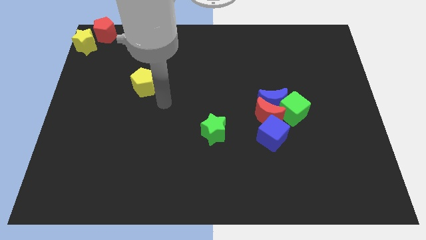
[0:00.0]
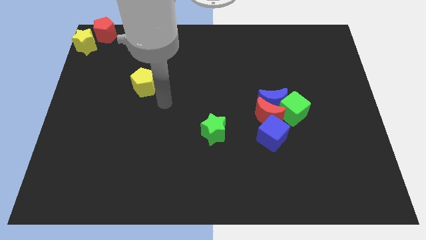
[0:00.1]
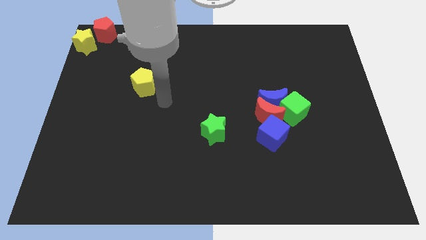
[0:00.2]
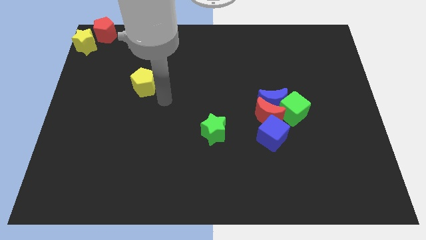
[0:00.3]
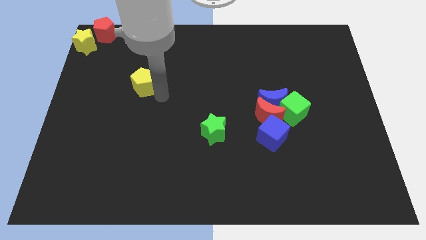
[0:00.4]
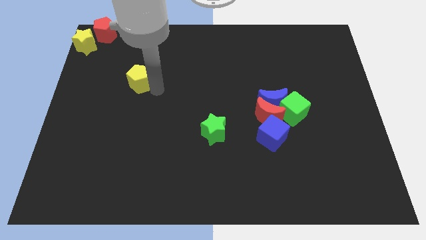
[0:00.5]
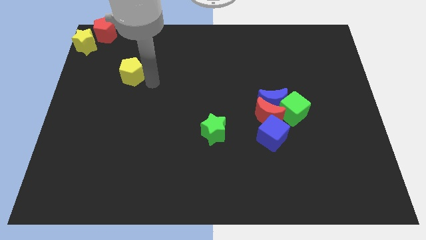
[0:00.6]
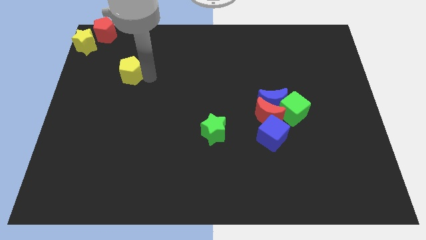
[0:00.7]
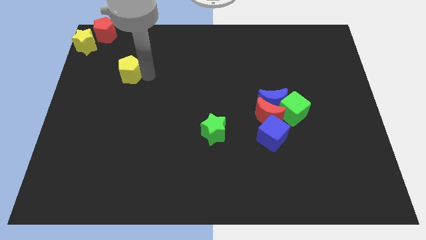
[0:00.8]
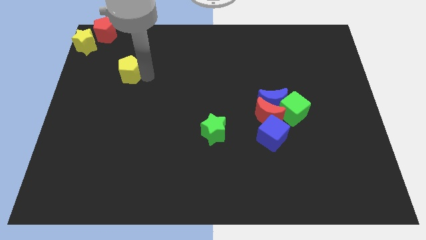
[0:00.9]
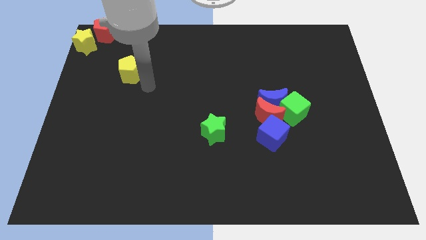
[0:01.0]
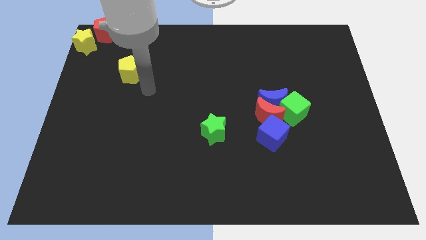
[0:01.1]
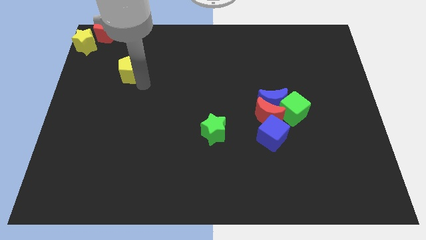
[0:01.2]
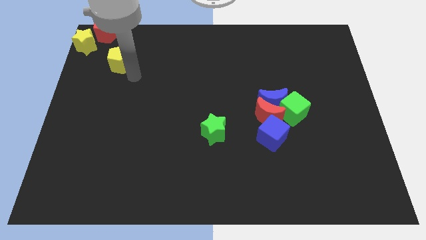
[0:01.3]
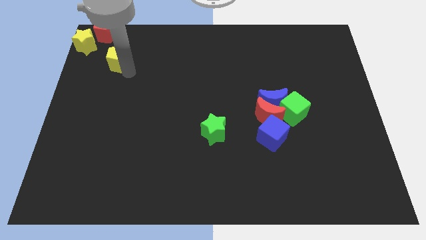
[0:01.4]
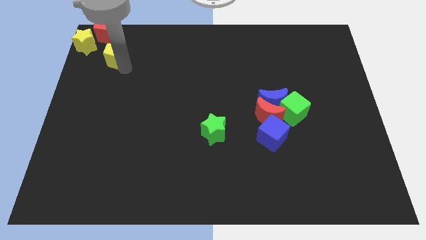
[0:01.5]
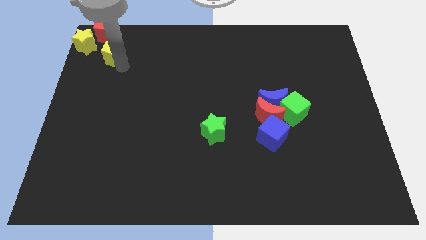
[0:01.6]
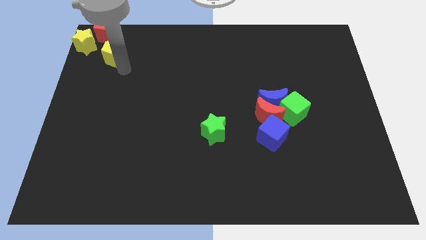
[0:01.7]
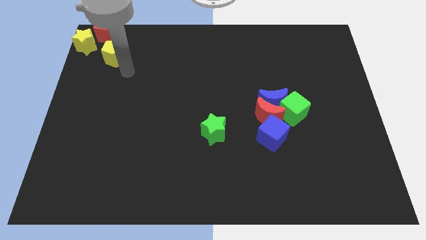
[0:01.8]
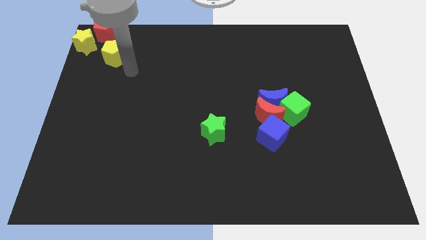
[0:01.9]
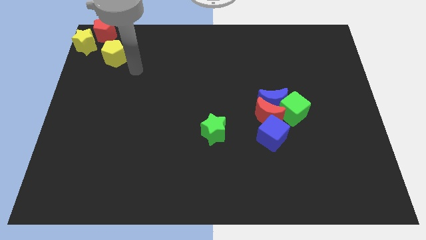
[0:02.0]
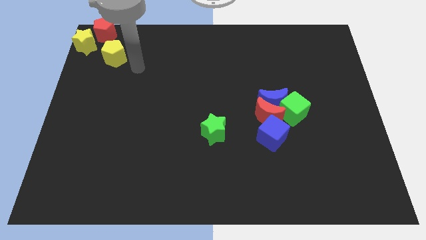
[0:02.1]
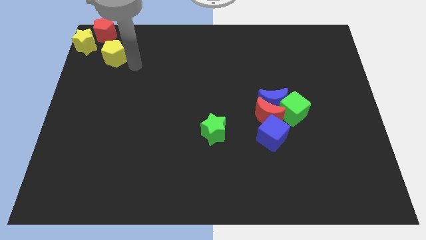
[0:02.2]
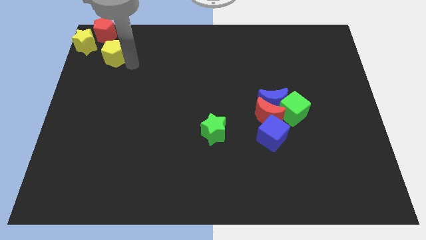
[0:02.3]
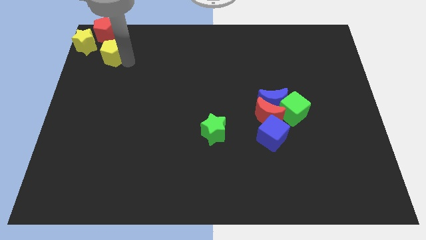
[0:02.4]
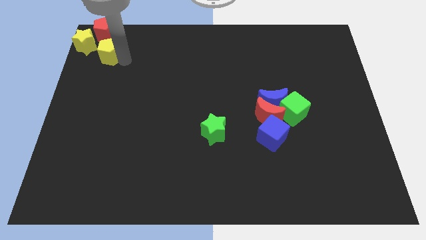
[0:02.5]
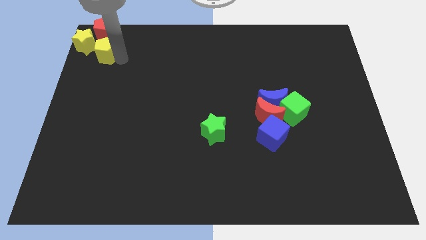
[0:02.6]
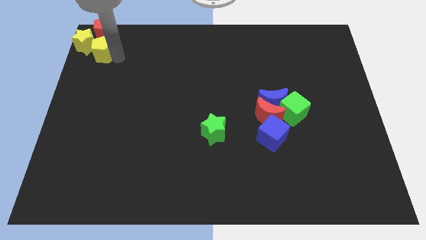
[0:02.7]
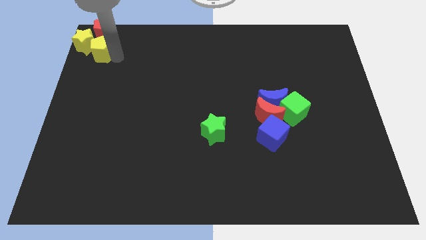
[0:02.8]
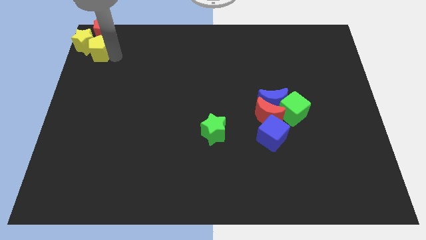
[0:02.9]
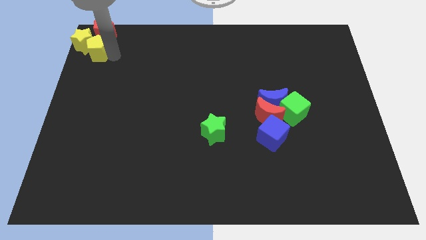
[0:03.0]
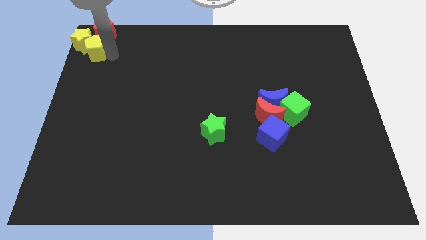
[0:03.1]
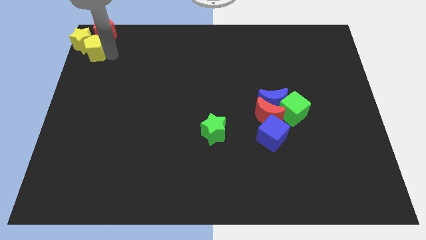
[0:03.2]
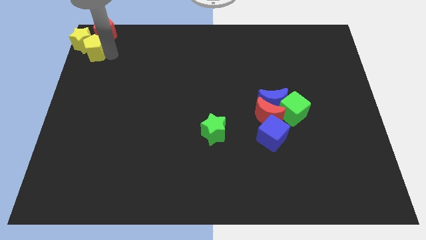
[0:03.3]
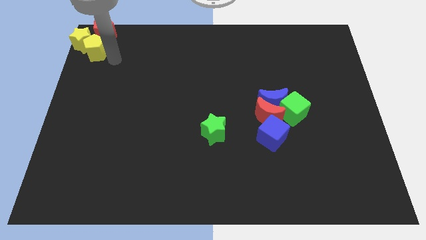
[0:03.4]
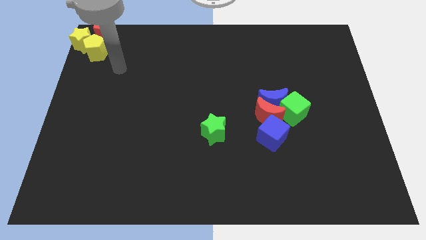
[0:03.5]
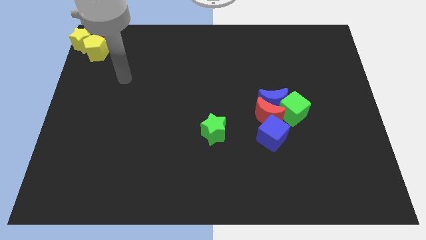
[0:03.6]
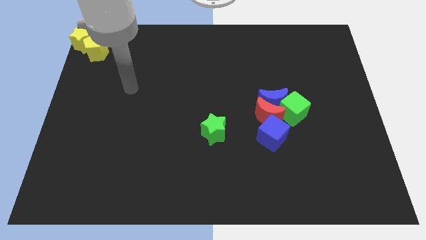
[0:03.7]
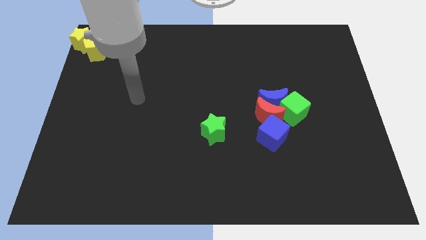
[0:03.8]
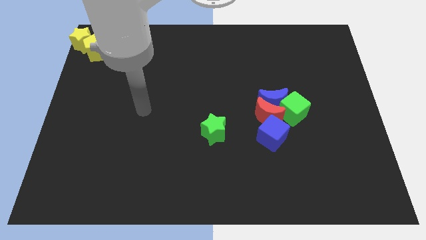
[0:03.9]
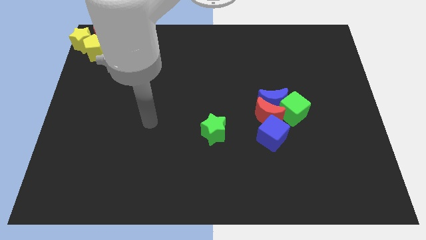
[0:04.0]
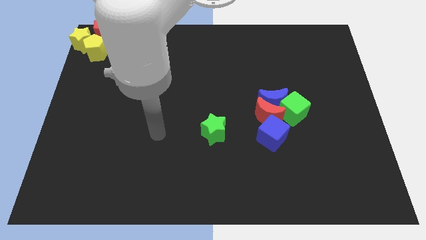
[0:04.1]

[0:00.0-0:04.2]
push the yellow pentagon into yellow star

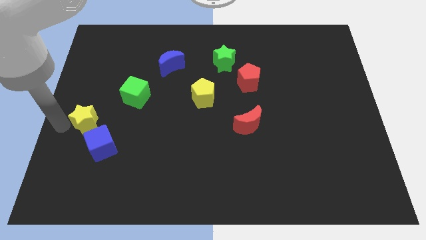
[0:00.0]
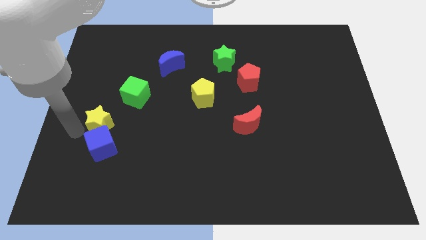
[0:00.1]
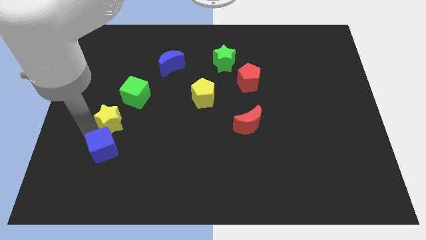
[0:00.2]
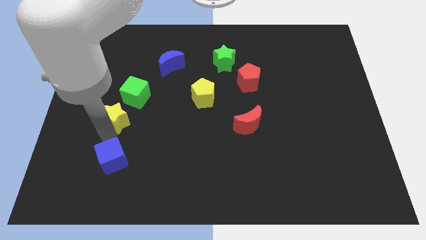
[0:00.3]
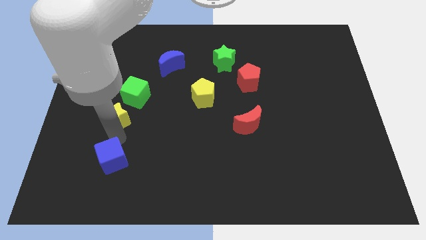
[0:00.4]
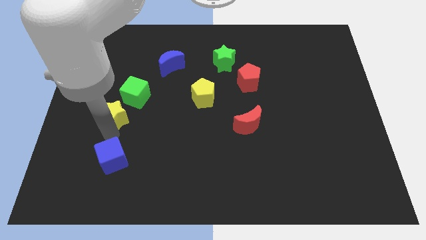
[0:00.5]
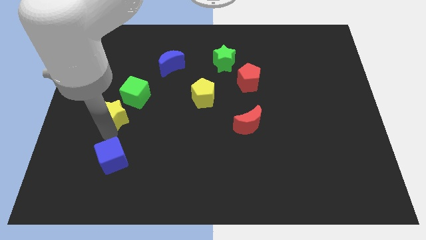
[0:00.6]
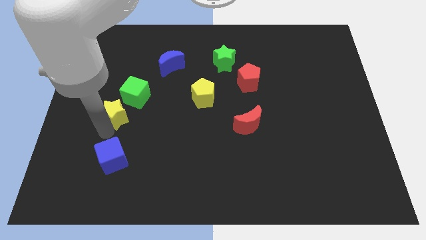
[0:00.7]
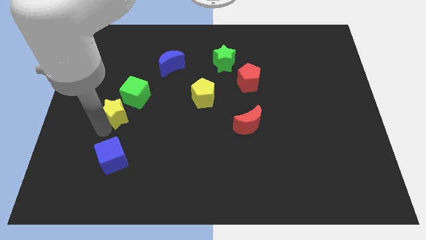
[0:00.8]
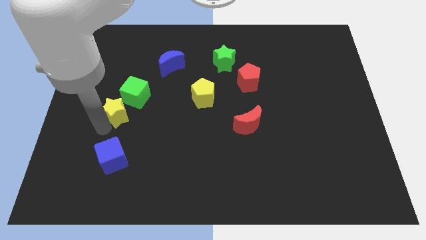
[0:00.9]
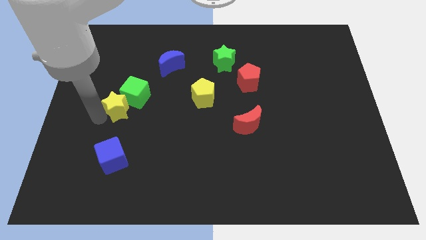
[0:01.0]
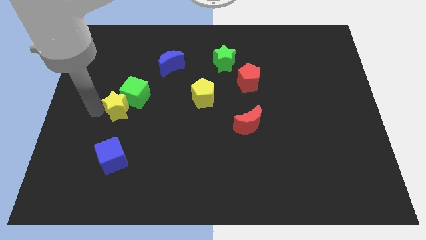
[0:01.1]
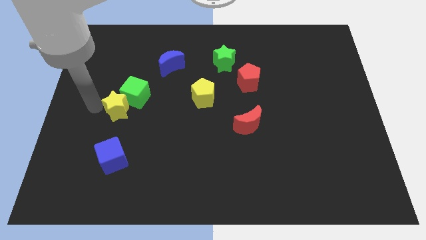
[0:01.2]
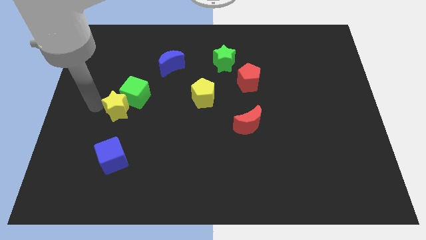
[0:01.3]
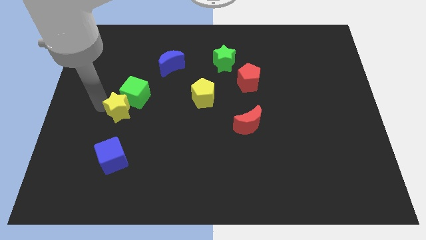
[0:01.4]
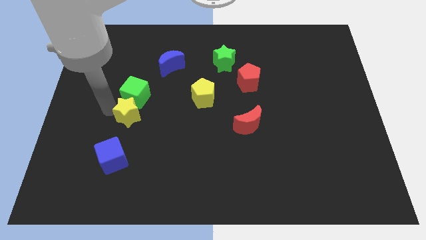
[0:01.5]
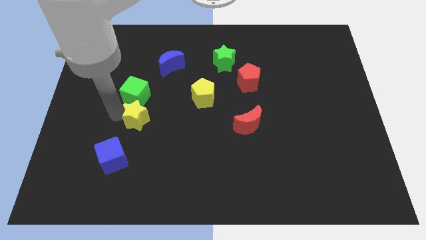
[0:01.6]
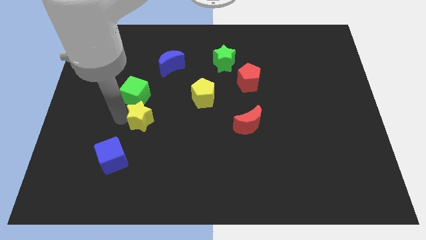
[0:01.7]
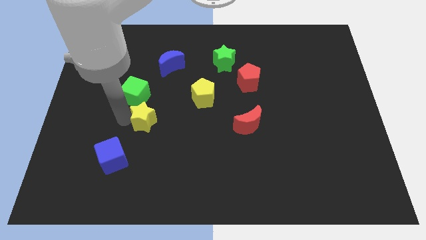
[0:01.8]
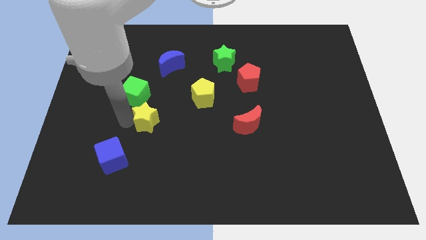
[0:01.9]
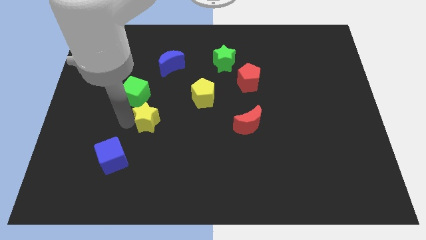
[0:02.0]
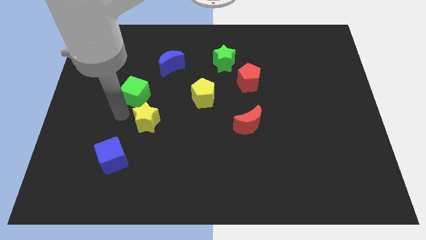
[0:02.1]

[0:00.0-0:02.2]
push the yellow star diagonally to the bottom right of the green cube

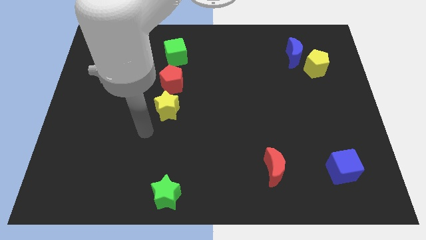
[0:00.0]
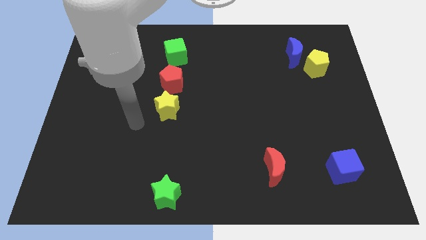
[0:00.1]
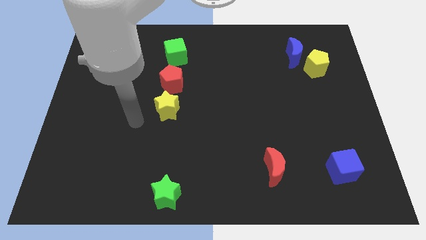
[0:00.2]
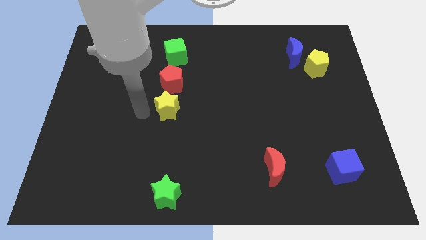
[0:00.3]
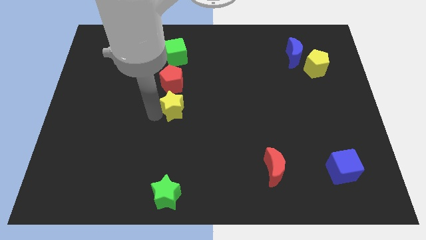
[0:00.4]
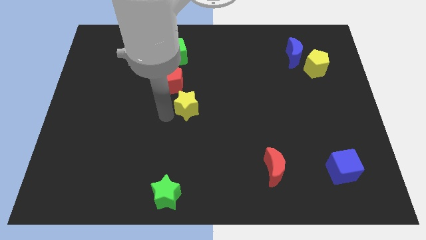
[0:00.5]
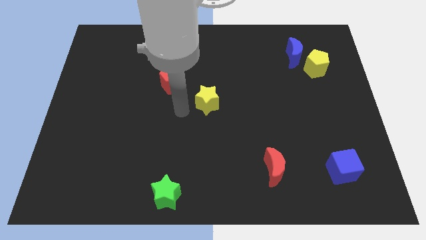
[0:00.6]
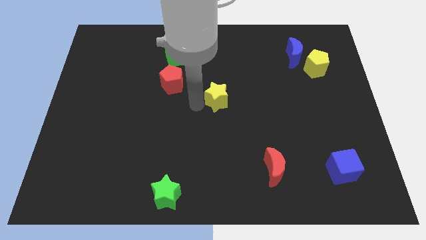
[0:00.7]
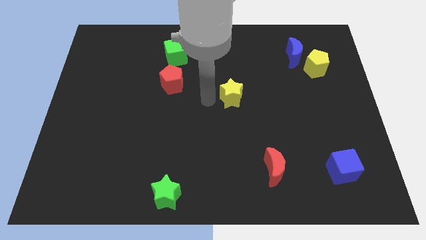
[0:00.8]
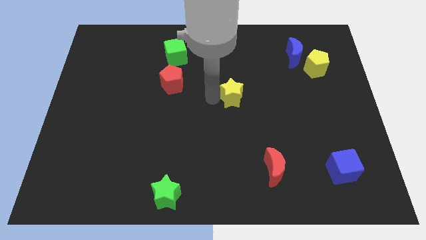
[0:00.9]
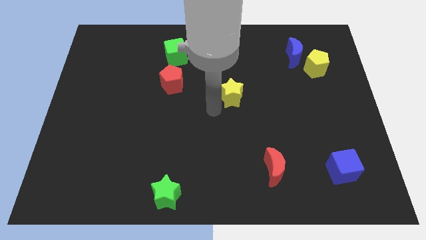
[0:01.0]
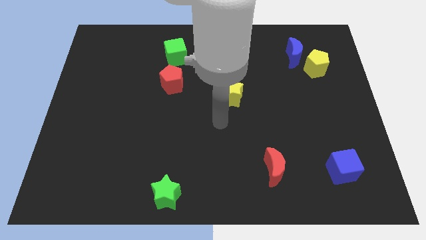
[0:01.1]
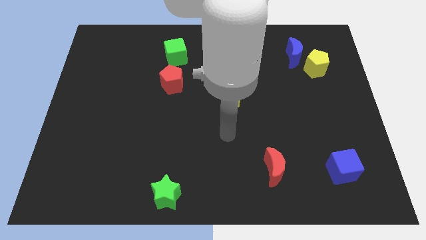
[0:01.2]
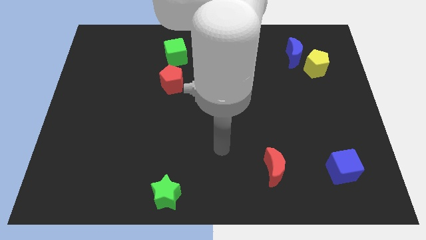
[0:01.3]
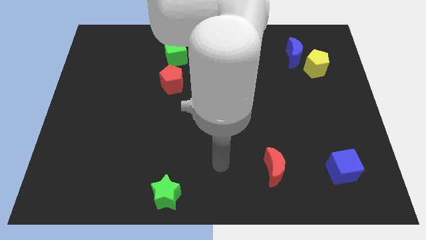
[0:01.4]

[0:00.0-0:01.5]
move the yellow star to the right of the board

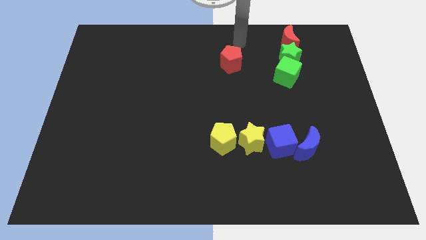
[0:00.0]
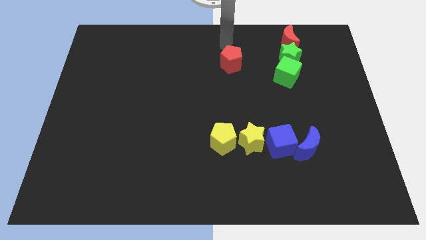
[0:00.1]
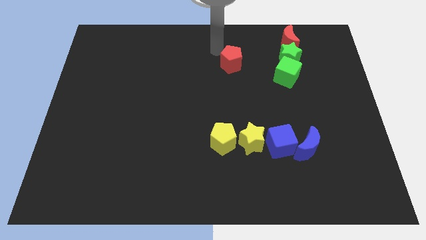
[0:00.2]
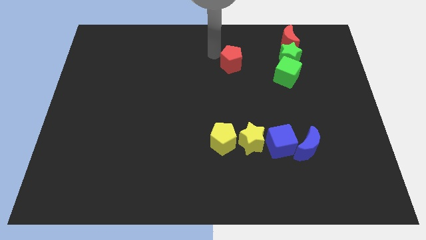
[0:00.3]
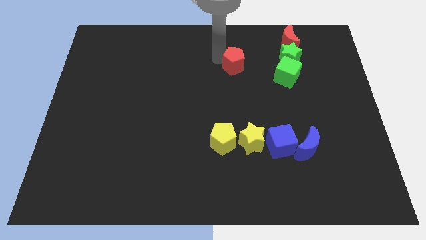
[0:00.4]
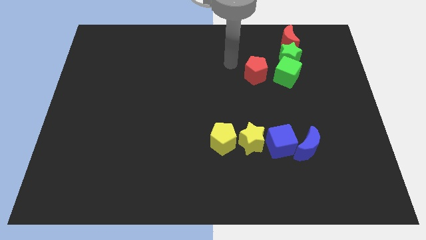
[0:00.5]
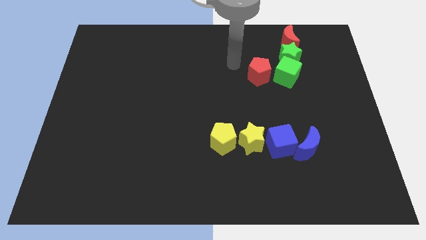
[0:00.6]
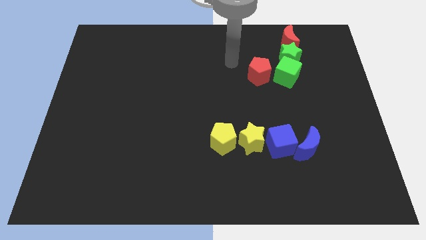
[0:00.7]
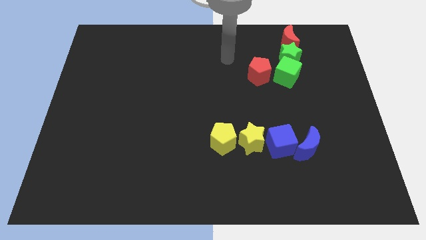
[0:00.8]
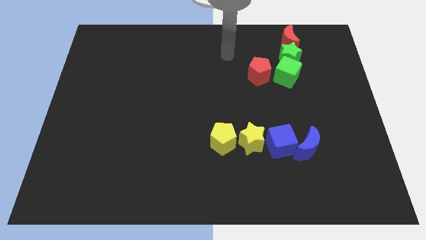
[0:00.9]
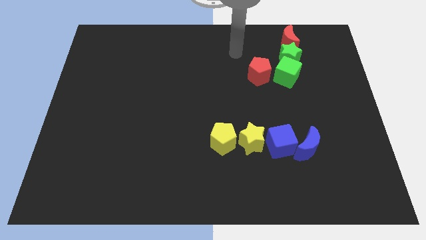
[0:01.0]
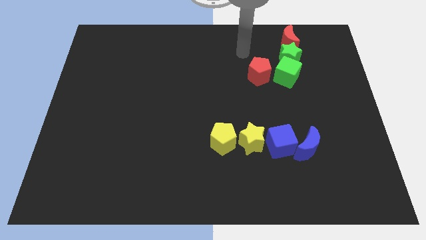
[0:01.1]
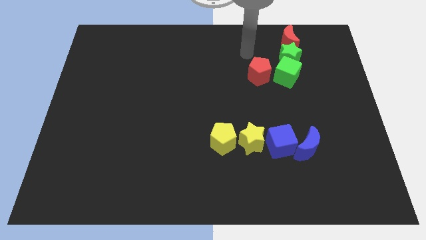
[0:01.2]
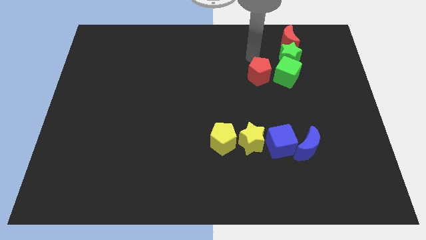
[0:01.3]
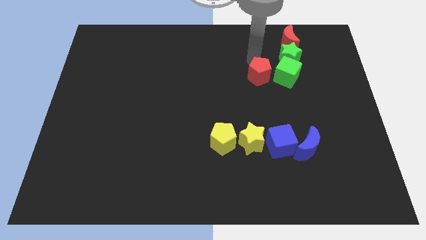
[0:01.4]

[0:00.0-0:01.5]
move the red pentagon left to the green cube
